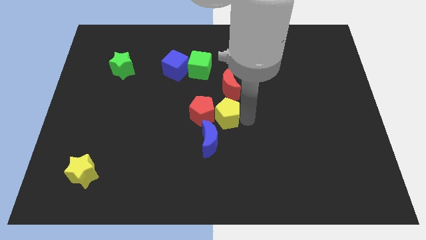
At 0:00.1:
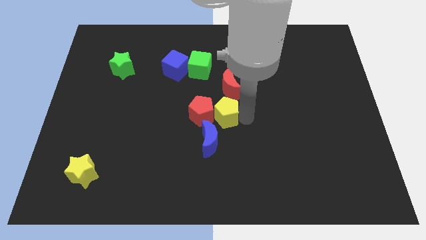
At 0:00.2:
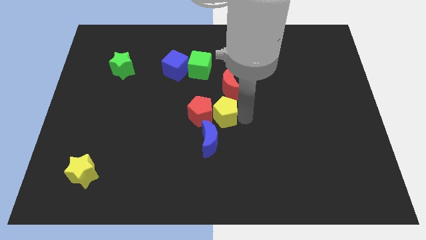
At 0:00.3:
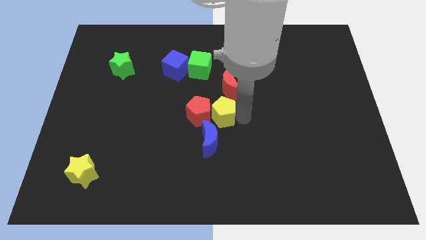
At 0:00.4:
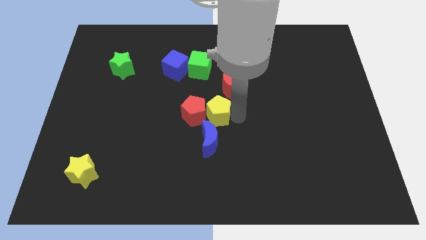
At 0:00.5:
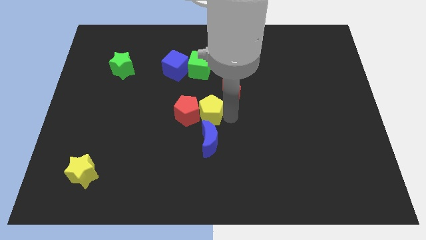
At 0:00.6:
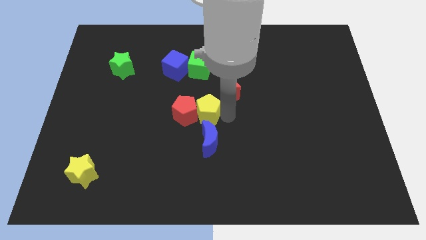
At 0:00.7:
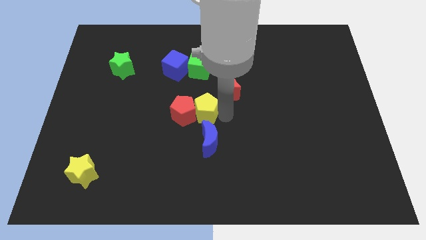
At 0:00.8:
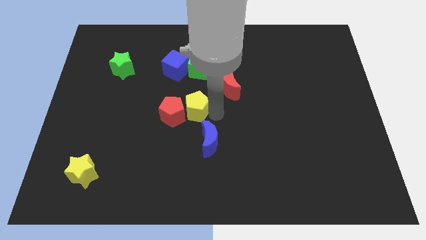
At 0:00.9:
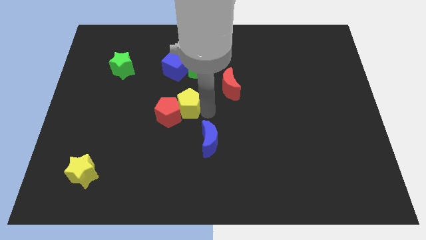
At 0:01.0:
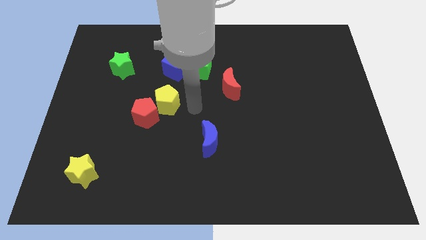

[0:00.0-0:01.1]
place yellow pentagon to the bottom of the blue cube

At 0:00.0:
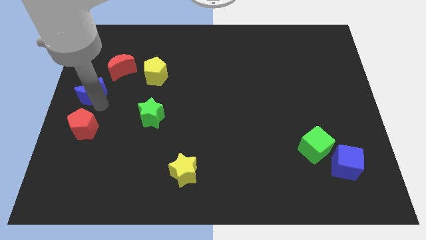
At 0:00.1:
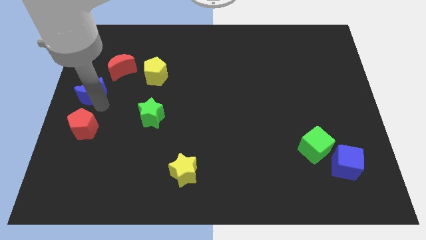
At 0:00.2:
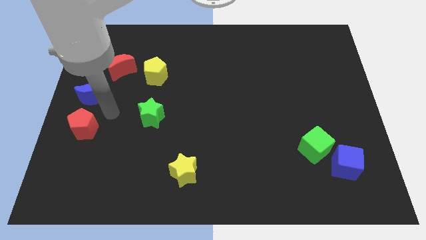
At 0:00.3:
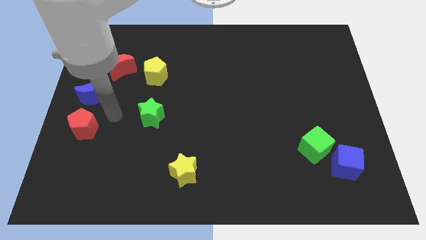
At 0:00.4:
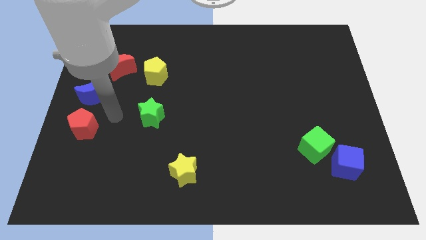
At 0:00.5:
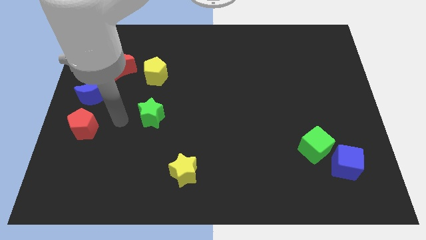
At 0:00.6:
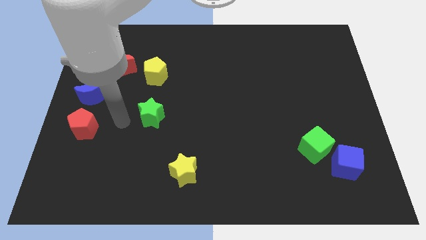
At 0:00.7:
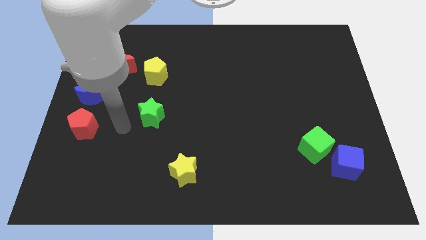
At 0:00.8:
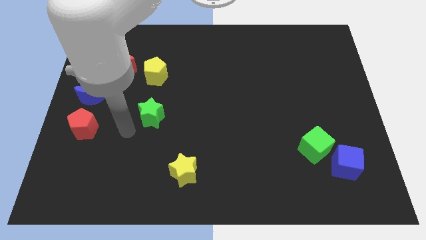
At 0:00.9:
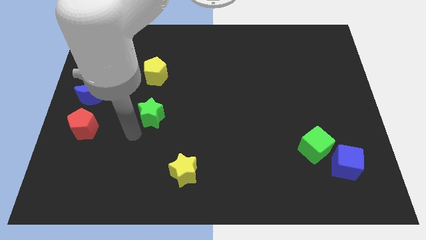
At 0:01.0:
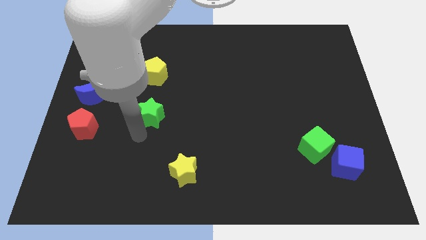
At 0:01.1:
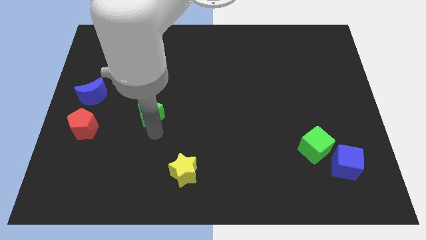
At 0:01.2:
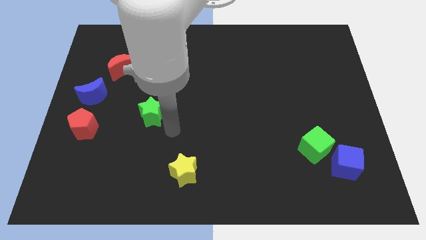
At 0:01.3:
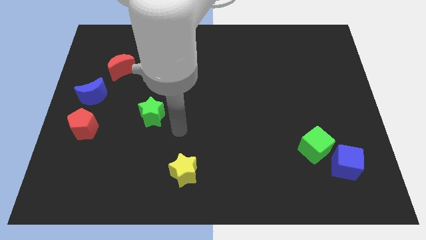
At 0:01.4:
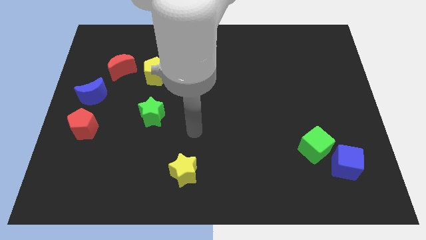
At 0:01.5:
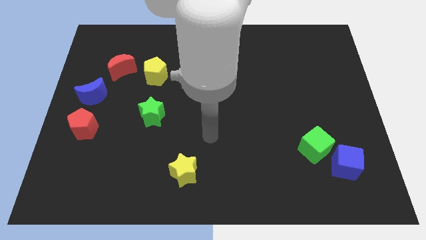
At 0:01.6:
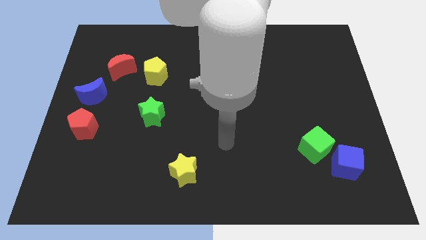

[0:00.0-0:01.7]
point your arm parallel to green cube

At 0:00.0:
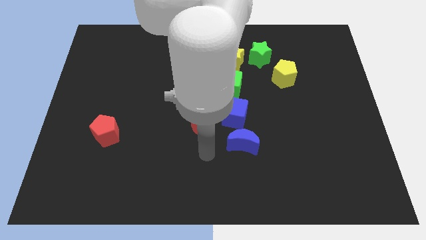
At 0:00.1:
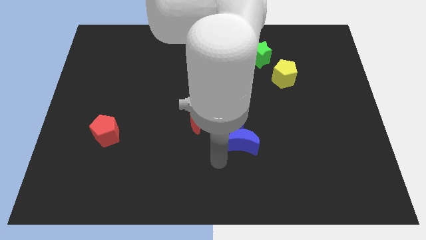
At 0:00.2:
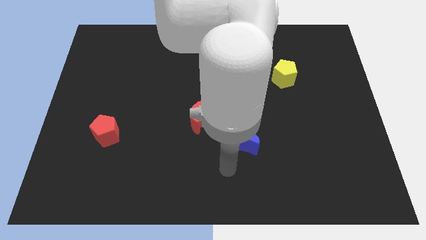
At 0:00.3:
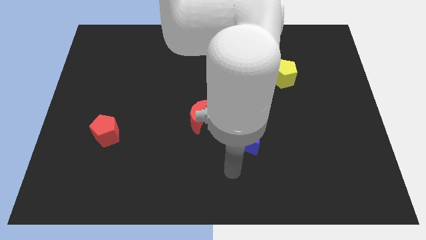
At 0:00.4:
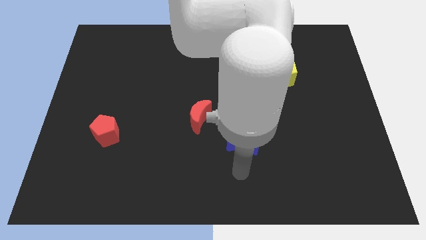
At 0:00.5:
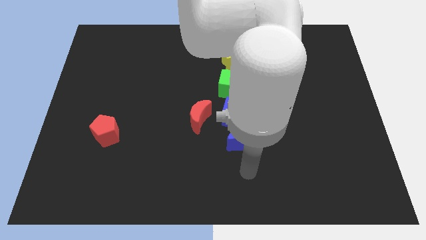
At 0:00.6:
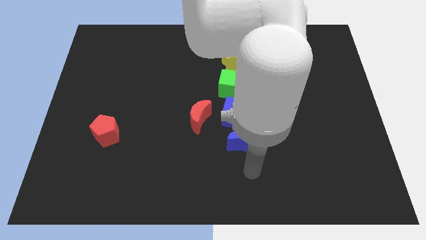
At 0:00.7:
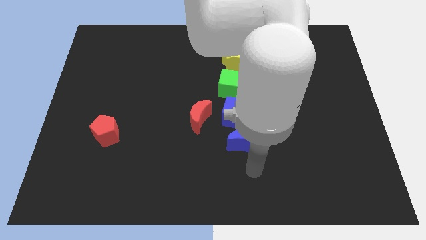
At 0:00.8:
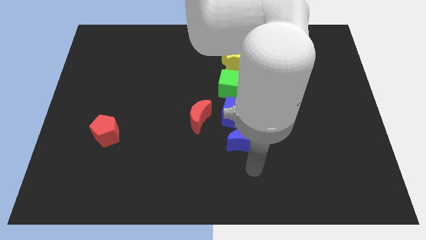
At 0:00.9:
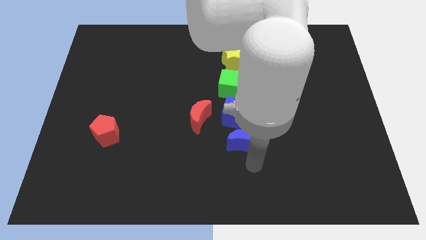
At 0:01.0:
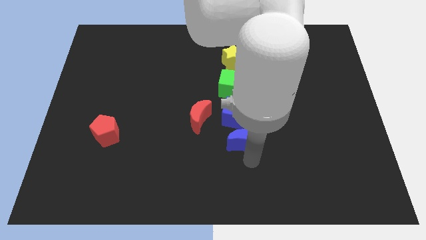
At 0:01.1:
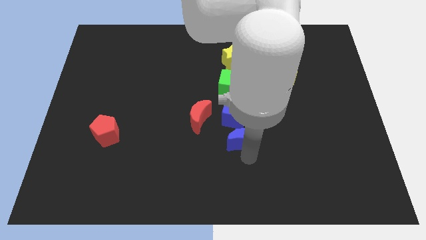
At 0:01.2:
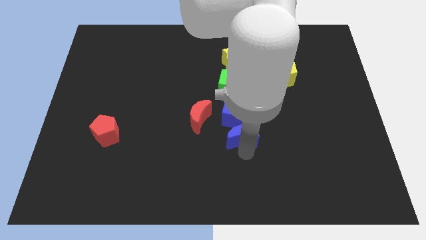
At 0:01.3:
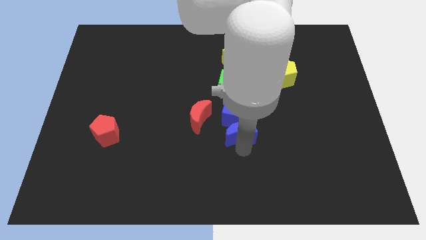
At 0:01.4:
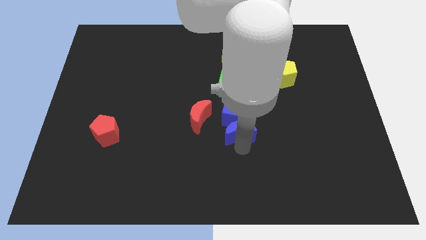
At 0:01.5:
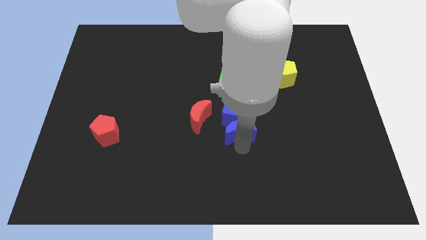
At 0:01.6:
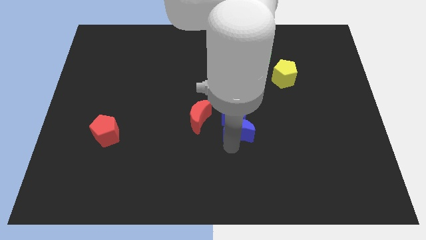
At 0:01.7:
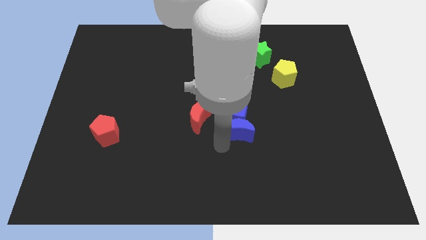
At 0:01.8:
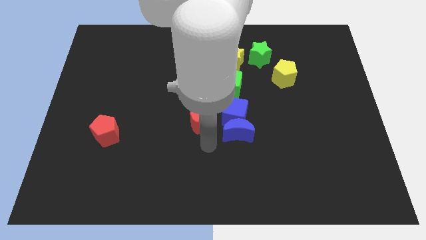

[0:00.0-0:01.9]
move the blue moon into the blue cube

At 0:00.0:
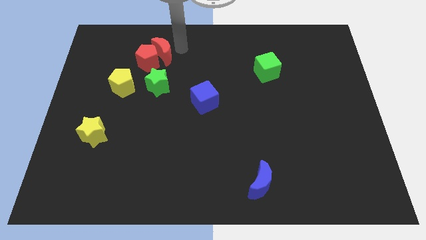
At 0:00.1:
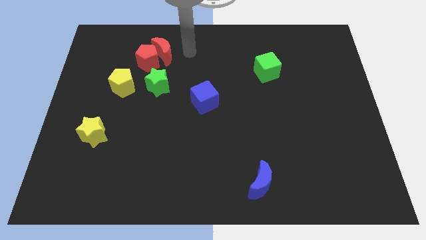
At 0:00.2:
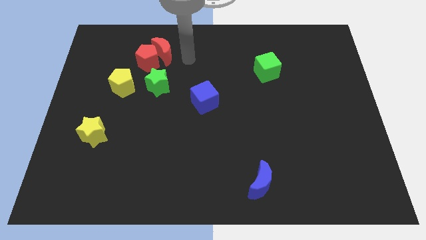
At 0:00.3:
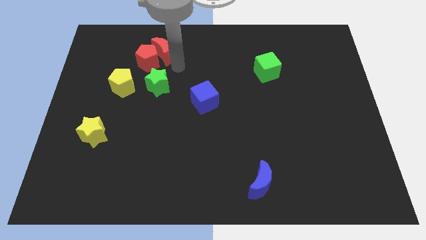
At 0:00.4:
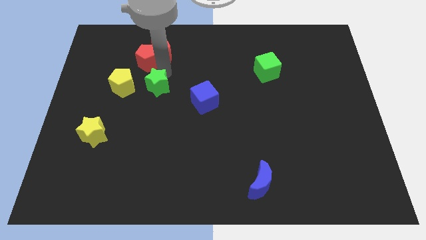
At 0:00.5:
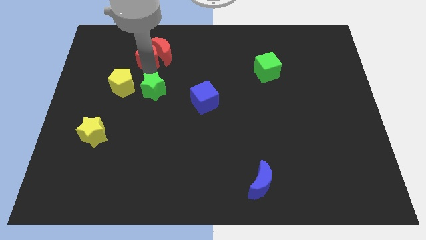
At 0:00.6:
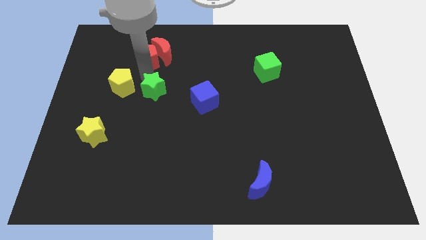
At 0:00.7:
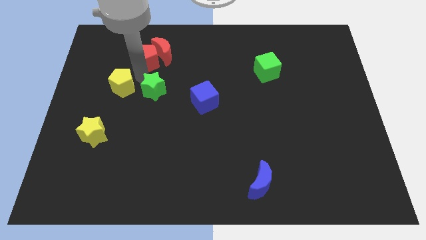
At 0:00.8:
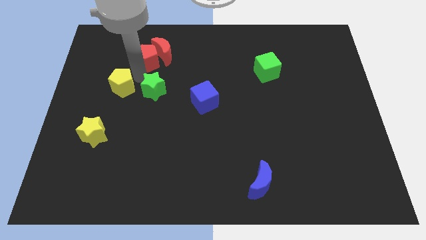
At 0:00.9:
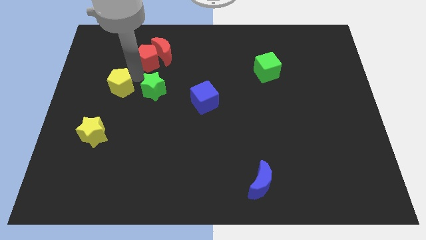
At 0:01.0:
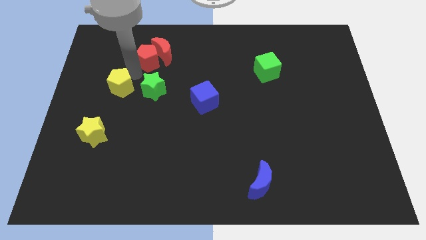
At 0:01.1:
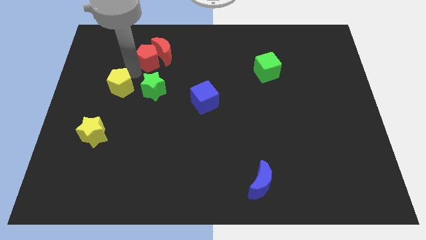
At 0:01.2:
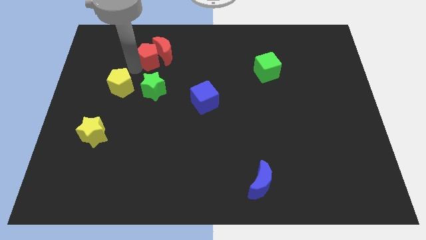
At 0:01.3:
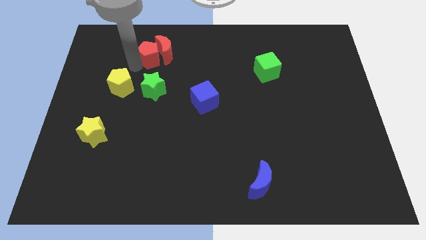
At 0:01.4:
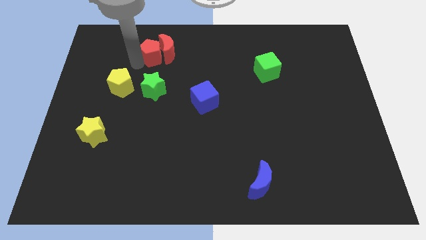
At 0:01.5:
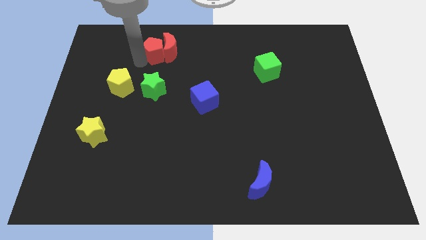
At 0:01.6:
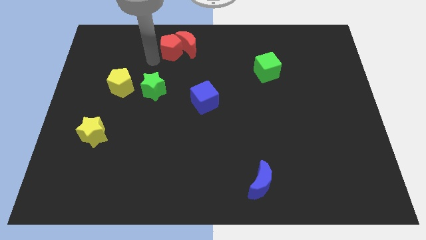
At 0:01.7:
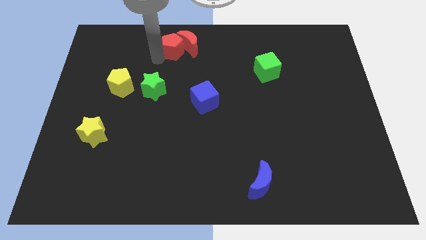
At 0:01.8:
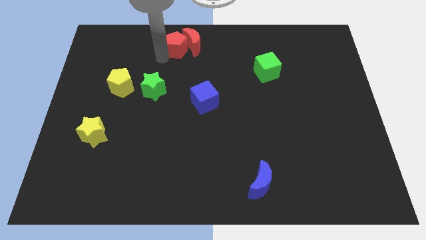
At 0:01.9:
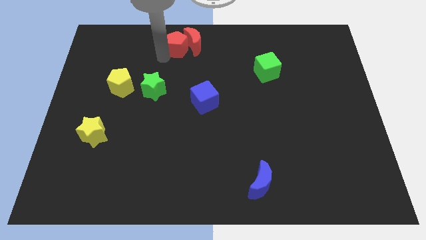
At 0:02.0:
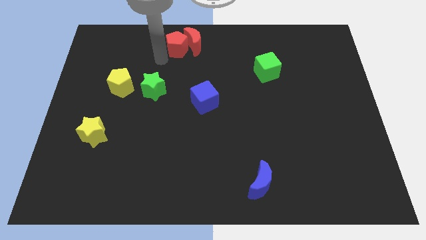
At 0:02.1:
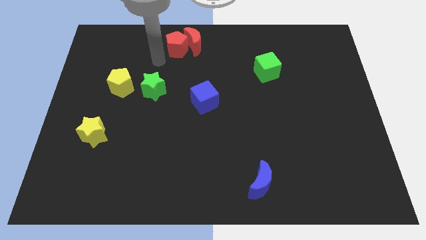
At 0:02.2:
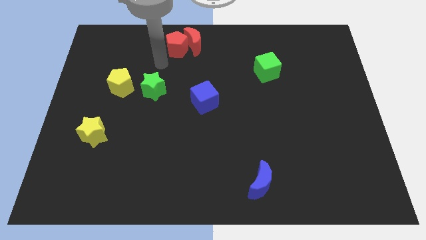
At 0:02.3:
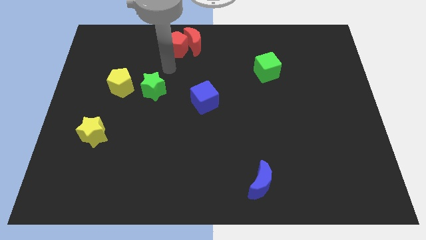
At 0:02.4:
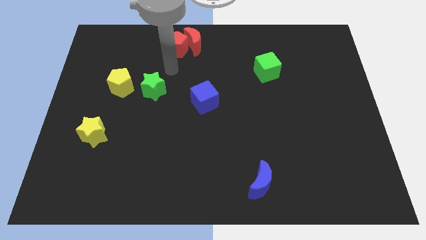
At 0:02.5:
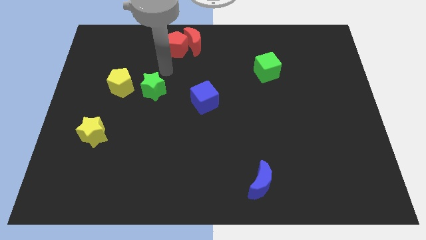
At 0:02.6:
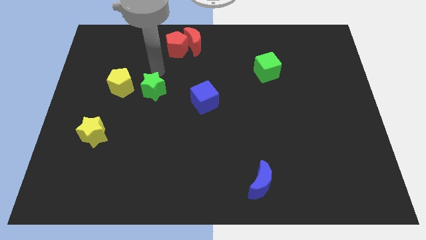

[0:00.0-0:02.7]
push the green star yellow pentagon upwards

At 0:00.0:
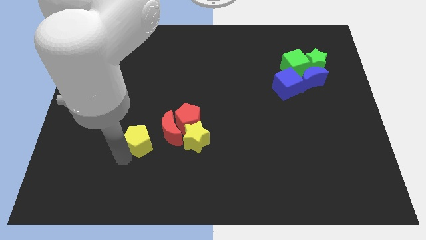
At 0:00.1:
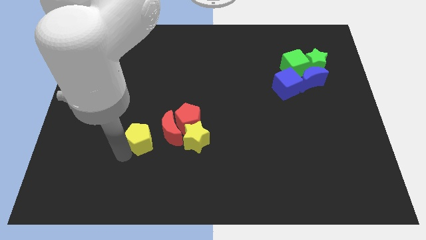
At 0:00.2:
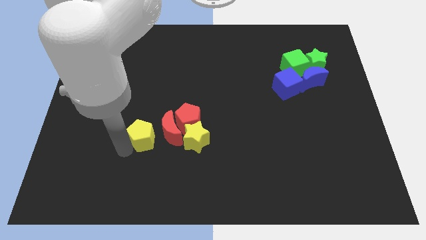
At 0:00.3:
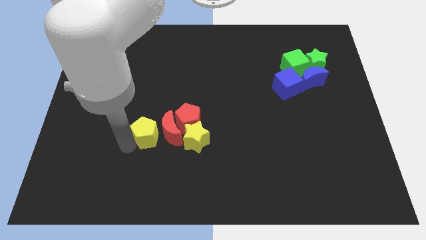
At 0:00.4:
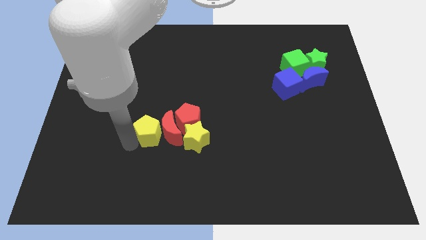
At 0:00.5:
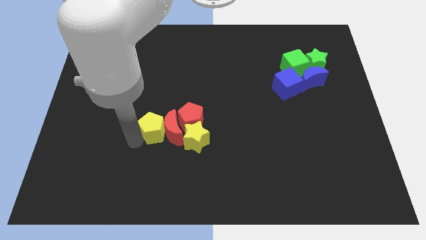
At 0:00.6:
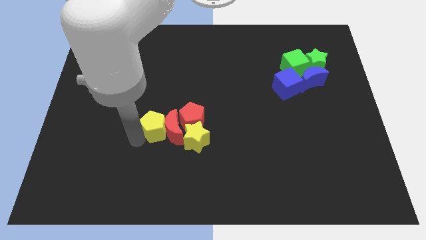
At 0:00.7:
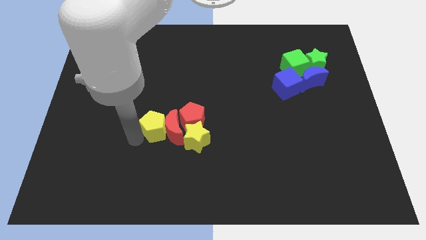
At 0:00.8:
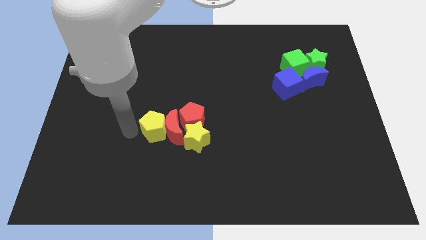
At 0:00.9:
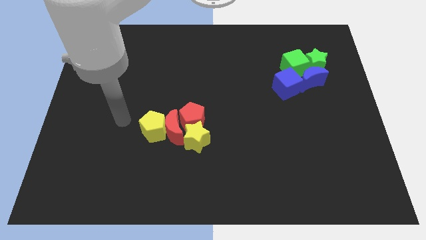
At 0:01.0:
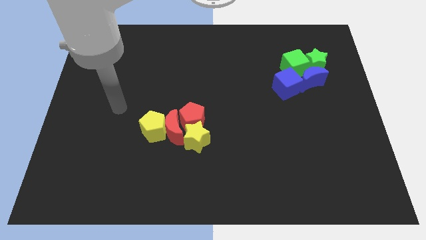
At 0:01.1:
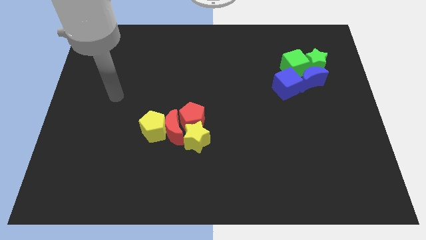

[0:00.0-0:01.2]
move the yellow pentagon into the group of blocks

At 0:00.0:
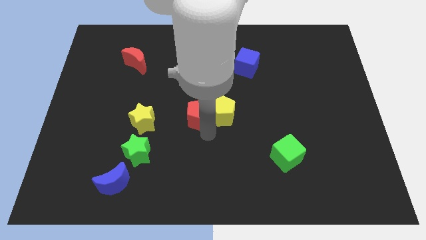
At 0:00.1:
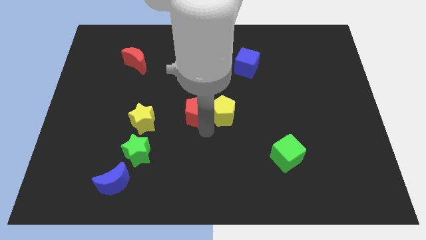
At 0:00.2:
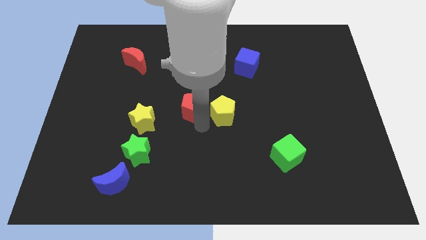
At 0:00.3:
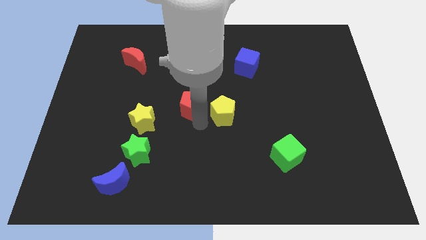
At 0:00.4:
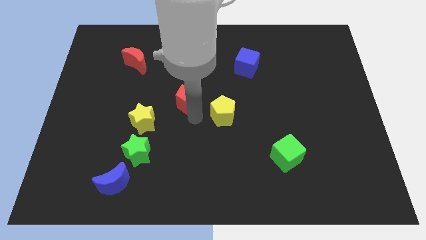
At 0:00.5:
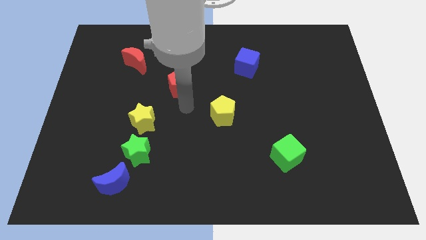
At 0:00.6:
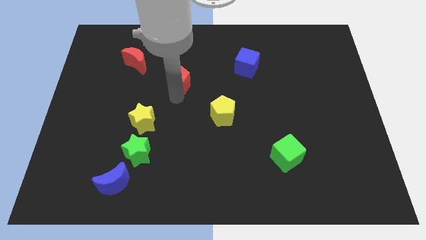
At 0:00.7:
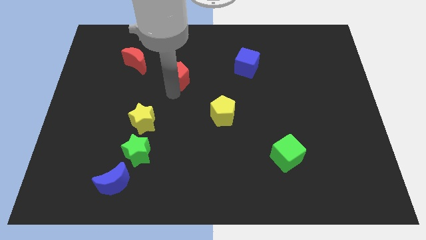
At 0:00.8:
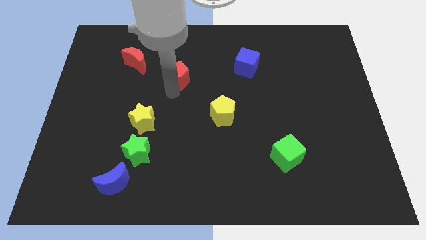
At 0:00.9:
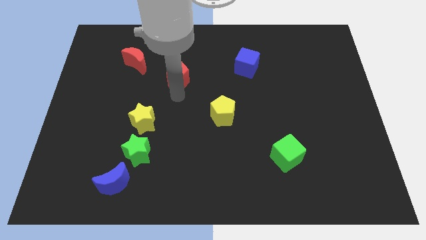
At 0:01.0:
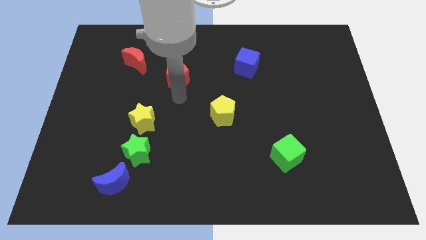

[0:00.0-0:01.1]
move the red pentagon diagonal to the yellow star
